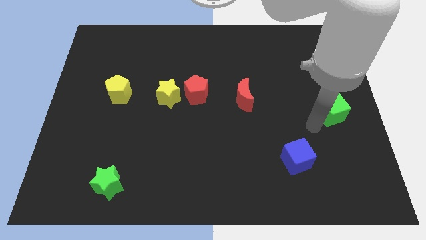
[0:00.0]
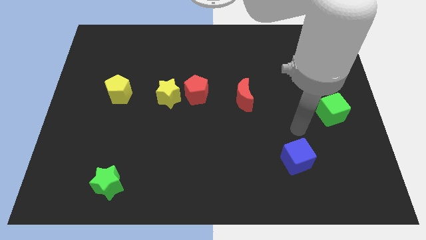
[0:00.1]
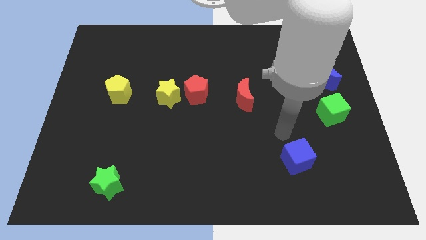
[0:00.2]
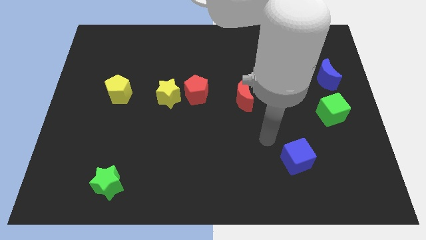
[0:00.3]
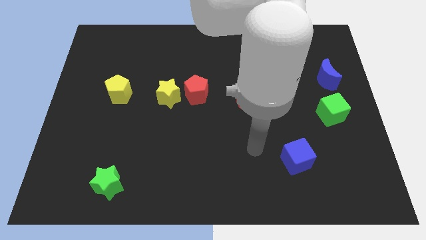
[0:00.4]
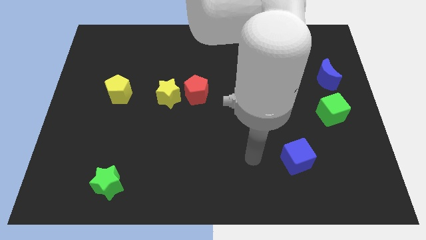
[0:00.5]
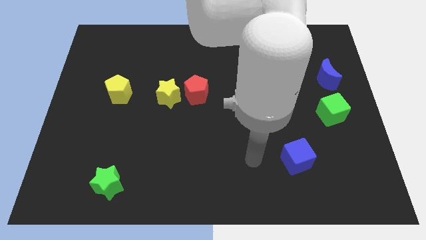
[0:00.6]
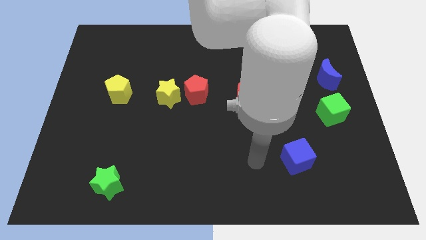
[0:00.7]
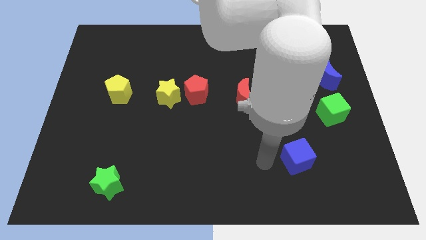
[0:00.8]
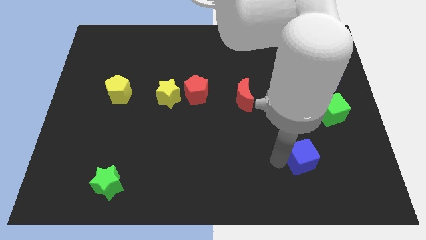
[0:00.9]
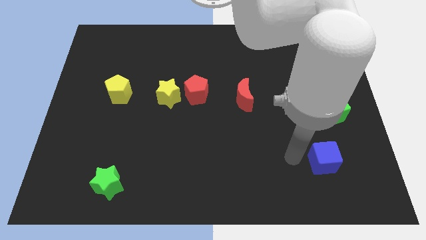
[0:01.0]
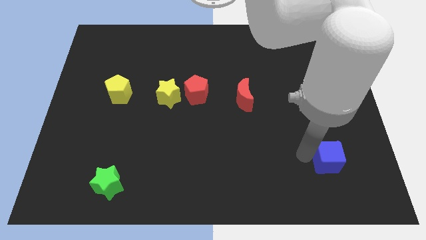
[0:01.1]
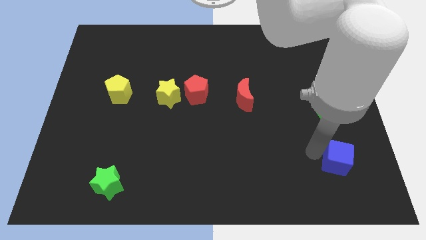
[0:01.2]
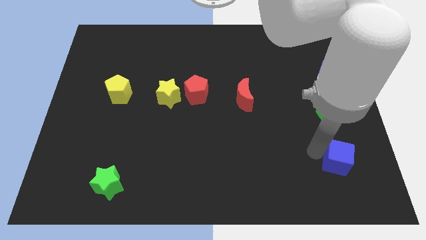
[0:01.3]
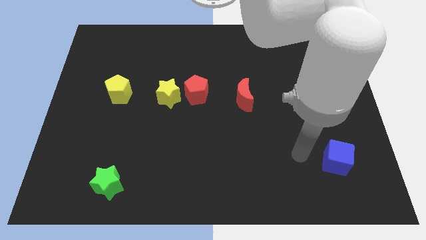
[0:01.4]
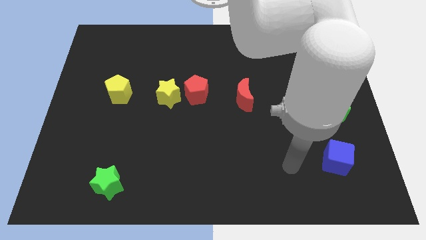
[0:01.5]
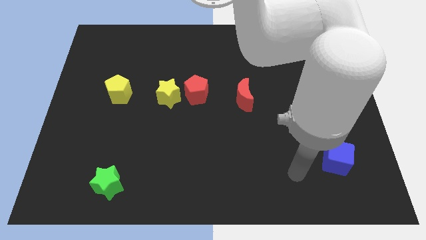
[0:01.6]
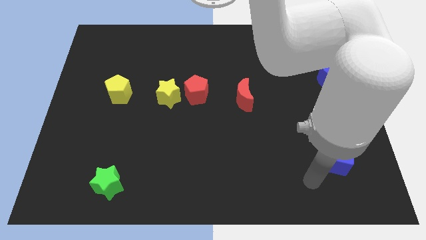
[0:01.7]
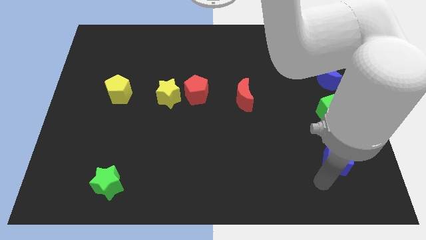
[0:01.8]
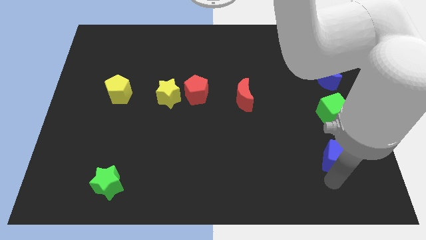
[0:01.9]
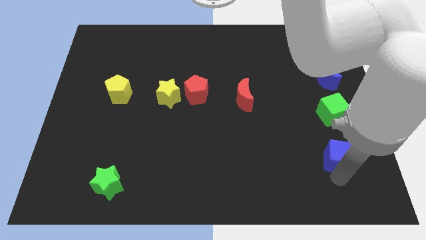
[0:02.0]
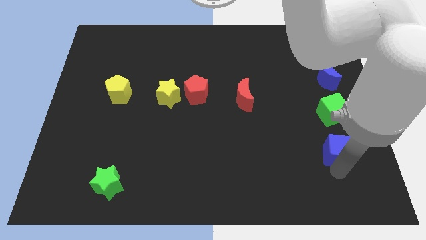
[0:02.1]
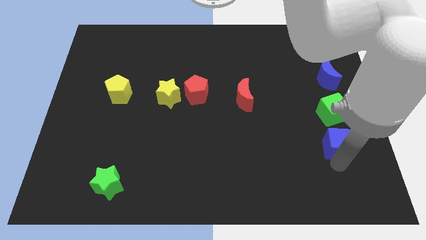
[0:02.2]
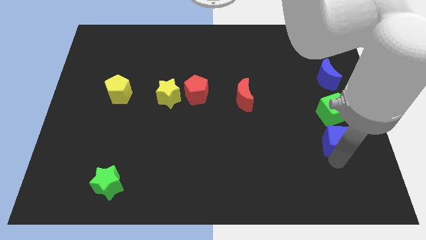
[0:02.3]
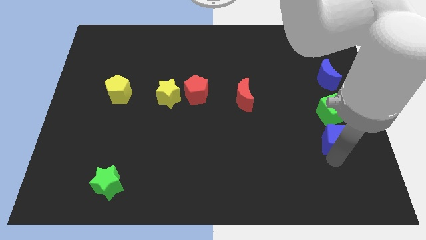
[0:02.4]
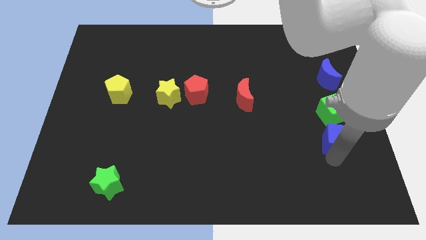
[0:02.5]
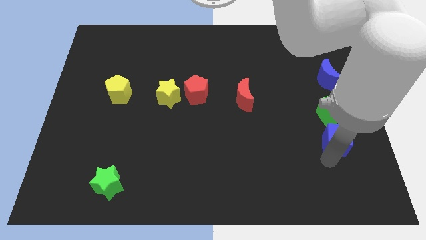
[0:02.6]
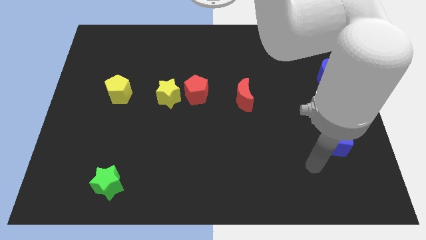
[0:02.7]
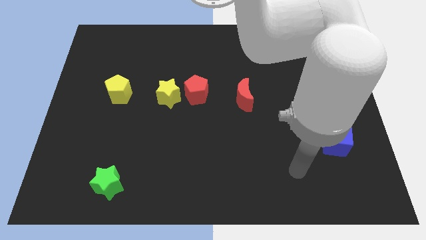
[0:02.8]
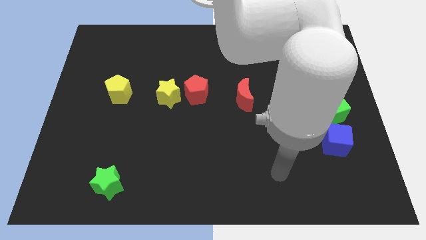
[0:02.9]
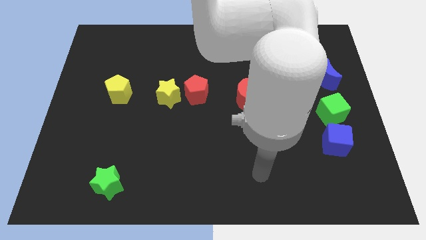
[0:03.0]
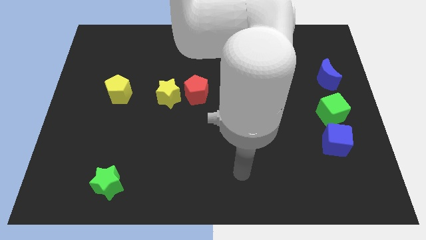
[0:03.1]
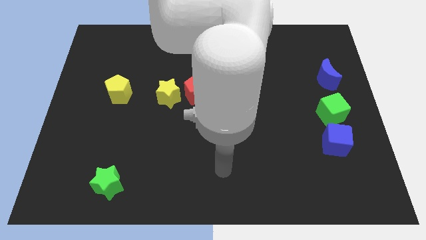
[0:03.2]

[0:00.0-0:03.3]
push the blue cube towards the center right

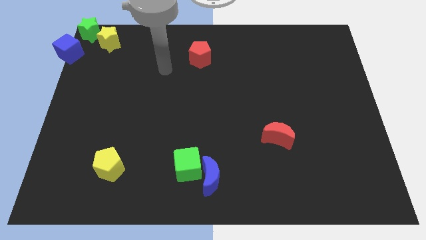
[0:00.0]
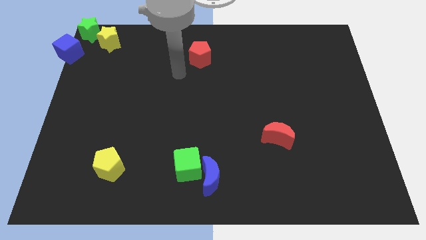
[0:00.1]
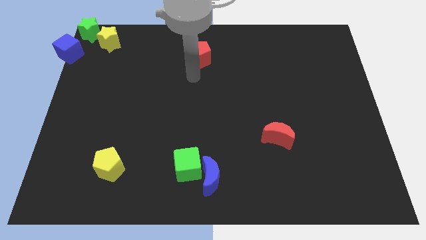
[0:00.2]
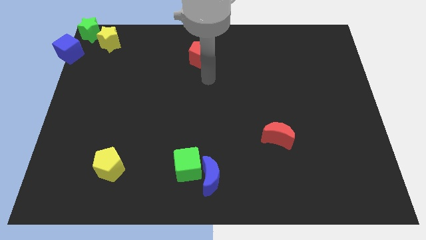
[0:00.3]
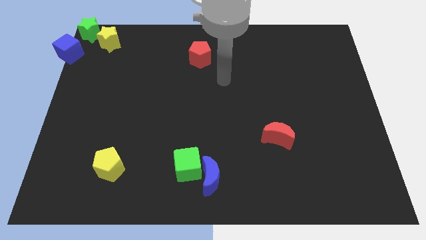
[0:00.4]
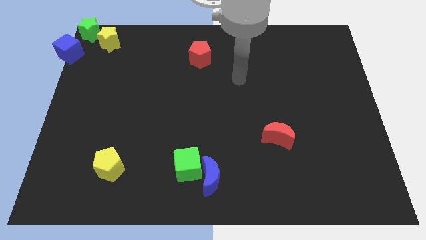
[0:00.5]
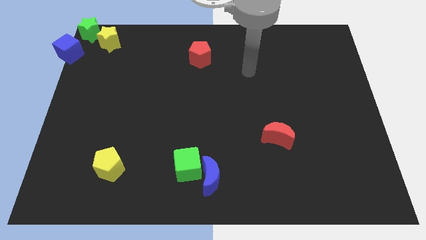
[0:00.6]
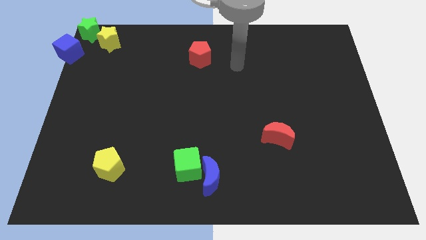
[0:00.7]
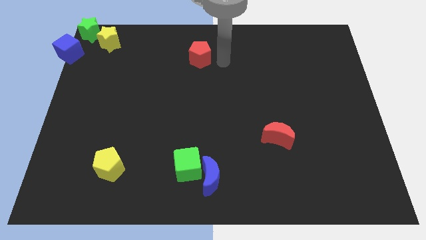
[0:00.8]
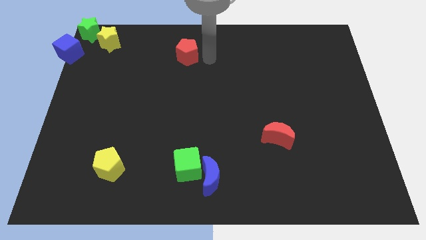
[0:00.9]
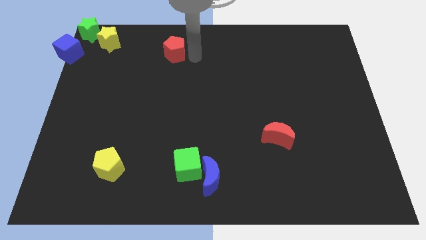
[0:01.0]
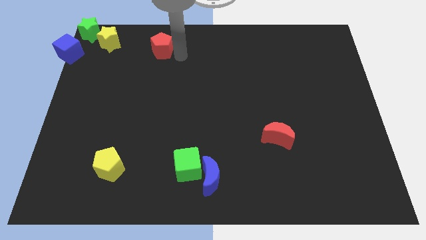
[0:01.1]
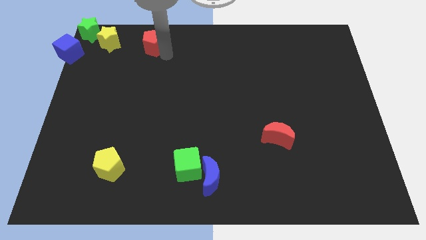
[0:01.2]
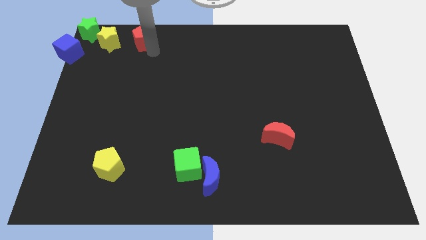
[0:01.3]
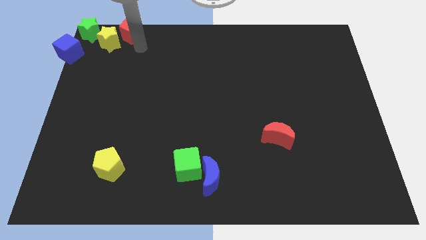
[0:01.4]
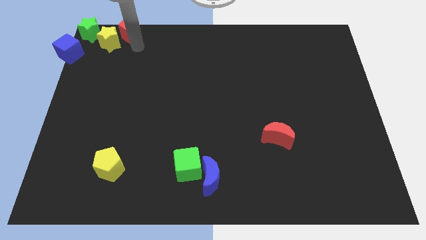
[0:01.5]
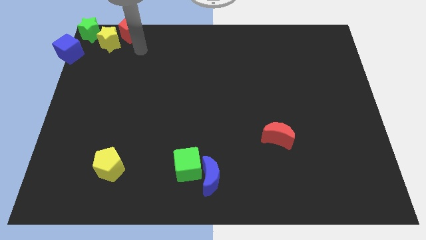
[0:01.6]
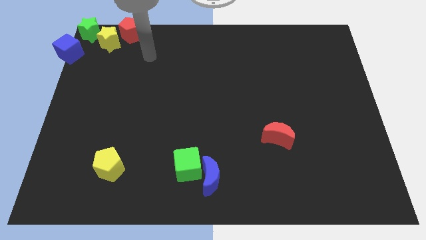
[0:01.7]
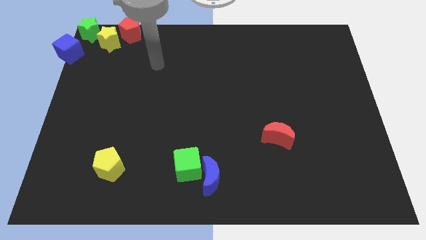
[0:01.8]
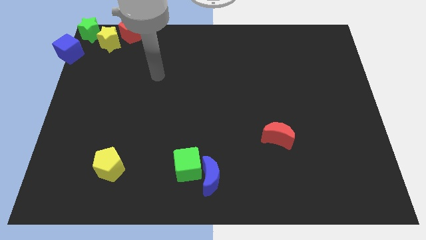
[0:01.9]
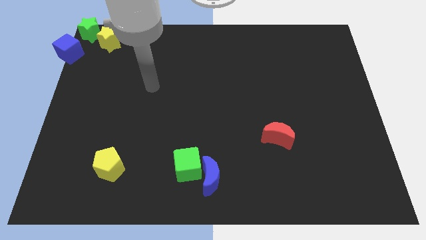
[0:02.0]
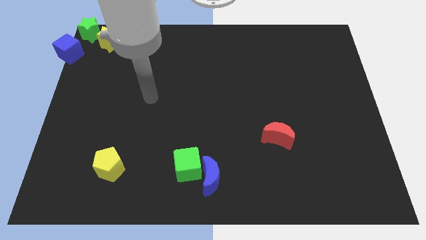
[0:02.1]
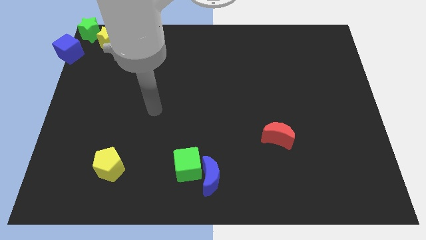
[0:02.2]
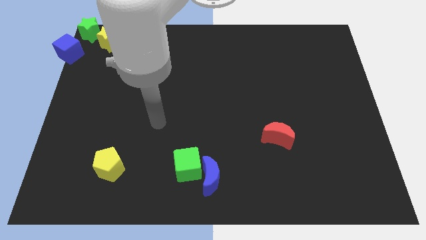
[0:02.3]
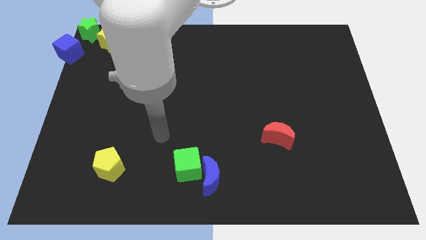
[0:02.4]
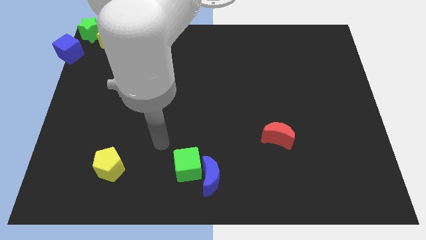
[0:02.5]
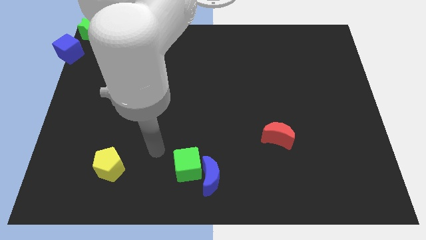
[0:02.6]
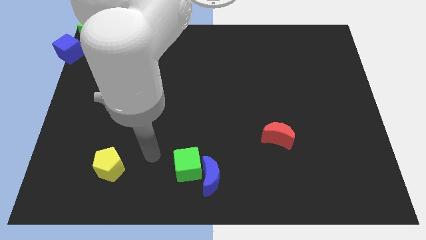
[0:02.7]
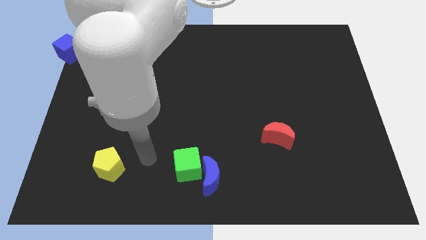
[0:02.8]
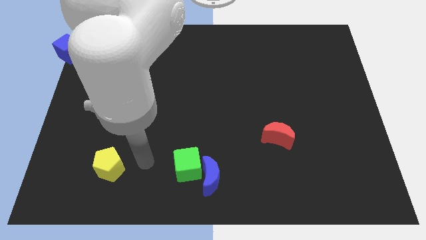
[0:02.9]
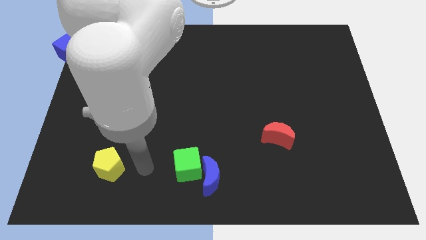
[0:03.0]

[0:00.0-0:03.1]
push the red pentagon towards yellow star

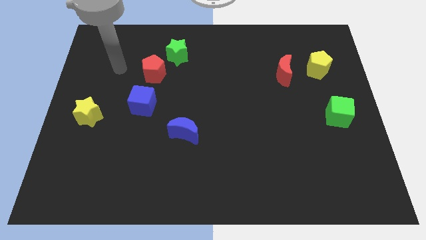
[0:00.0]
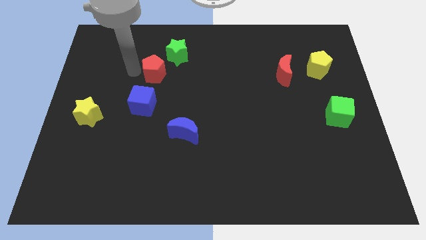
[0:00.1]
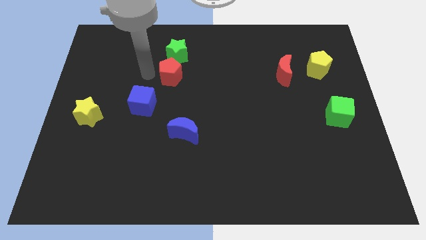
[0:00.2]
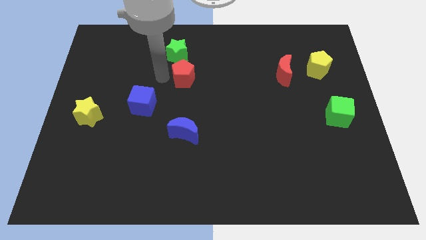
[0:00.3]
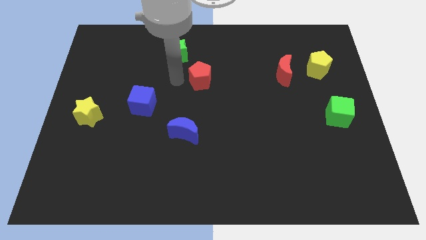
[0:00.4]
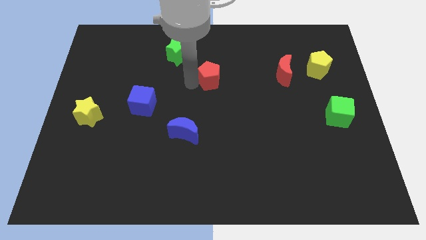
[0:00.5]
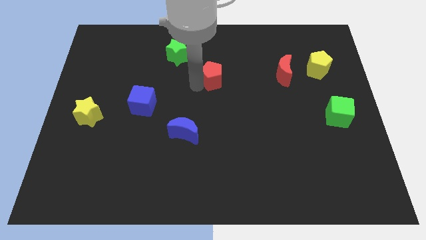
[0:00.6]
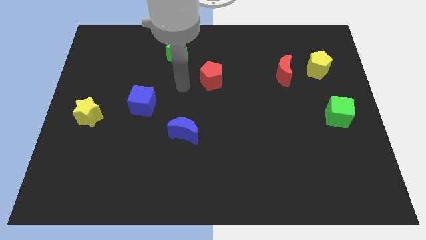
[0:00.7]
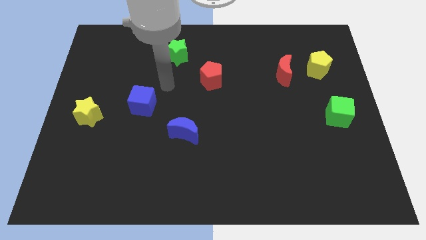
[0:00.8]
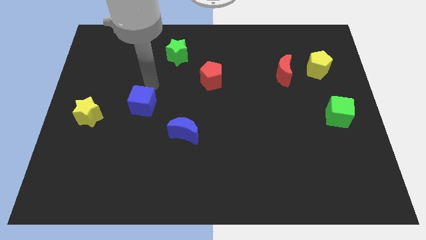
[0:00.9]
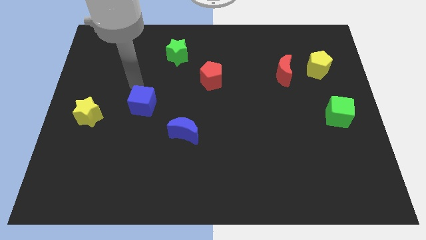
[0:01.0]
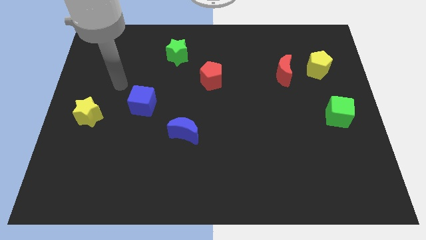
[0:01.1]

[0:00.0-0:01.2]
push the red pentagon towards the red moon

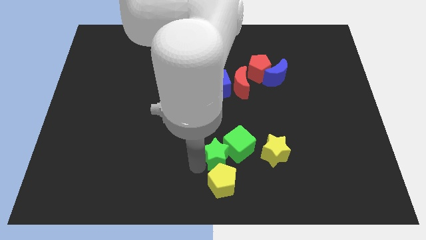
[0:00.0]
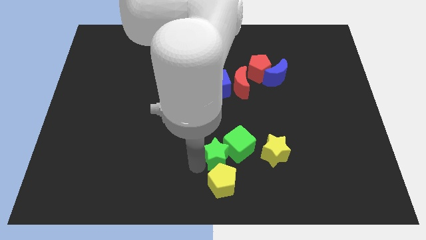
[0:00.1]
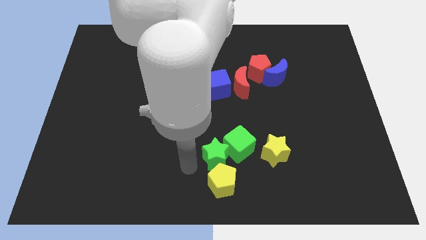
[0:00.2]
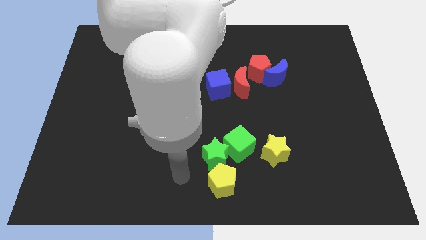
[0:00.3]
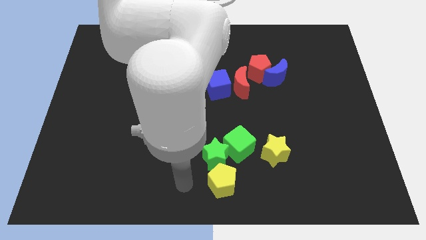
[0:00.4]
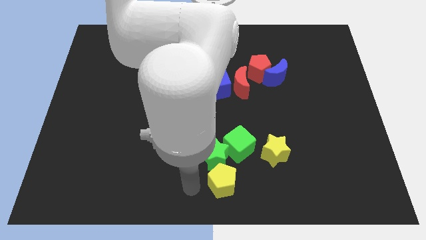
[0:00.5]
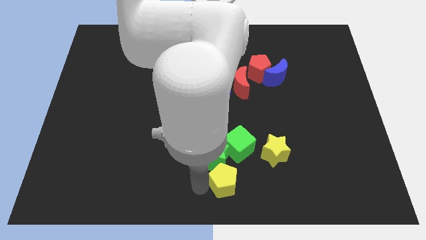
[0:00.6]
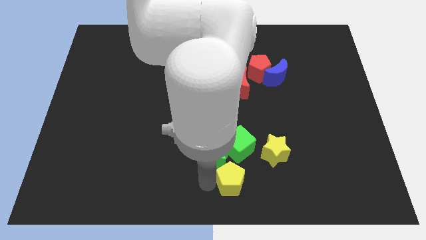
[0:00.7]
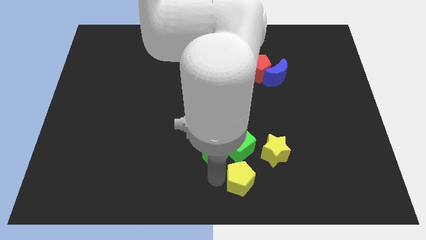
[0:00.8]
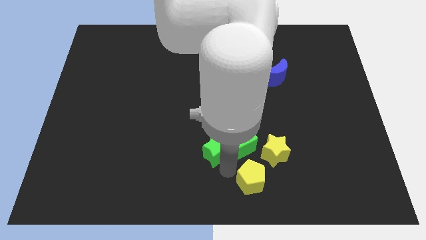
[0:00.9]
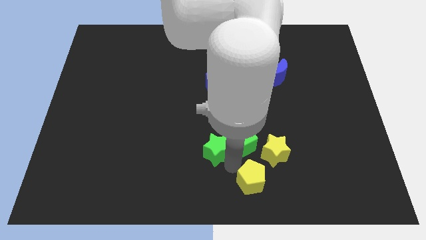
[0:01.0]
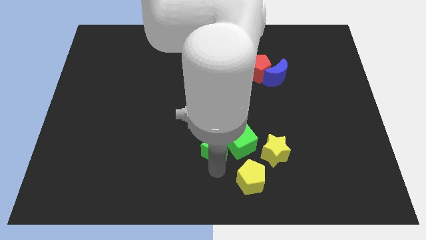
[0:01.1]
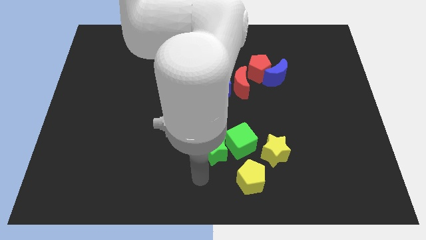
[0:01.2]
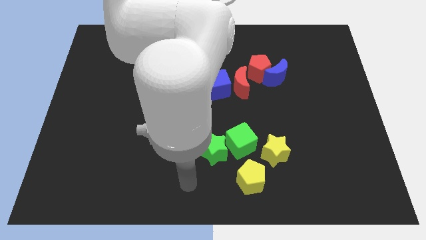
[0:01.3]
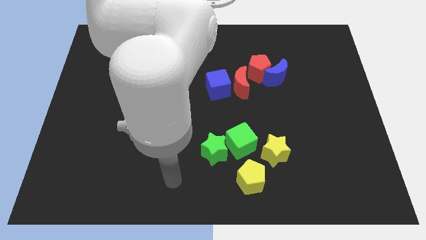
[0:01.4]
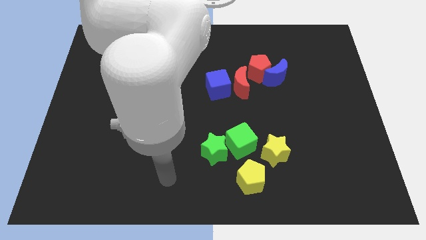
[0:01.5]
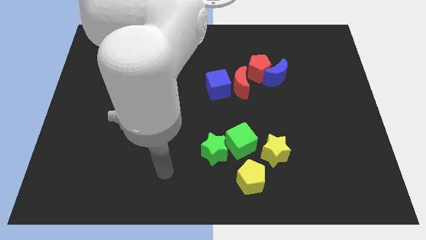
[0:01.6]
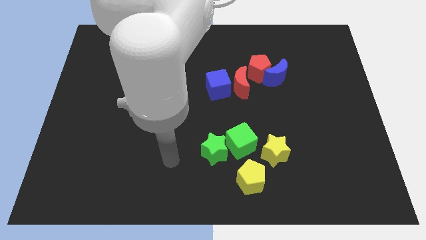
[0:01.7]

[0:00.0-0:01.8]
separate yellow pentagon from the green star
